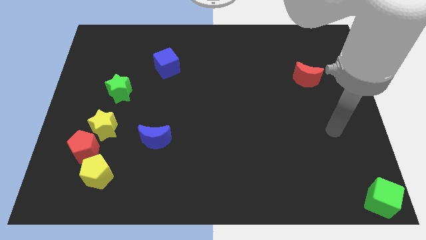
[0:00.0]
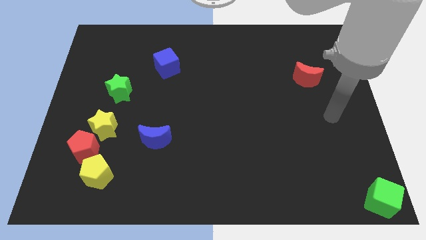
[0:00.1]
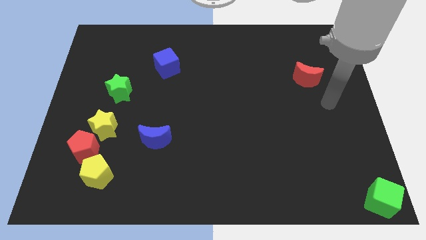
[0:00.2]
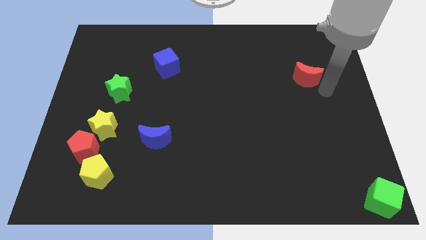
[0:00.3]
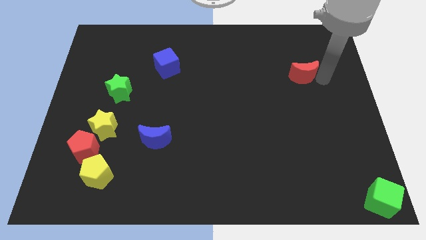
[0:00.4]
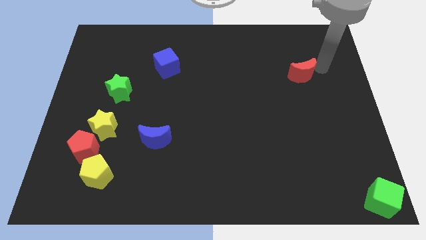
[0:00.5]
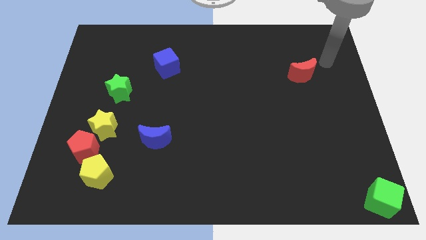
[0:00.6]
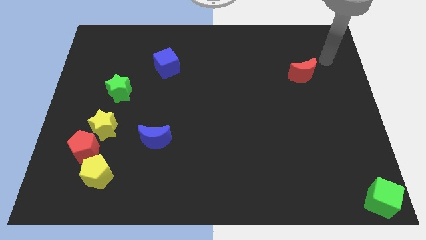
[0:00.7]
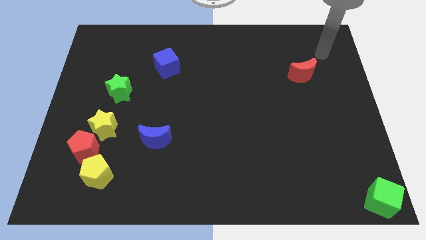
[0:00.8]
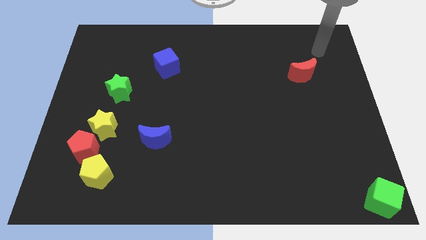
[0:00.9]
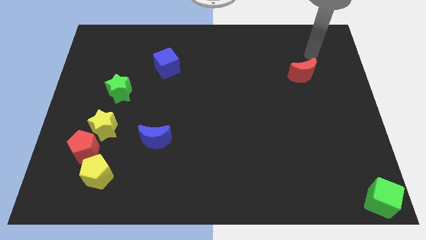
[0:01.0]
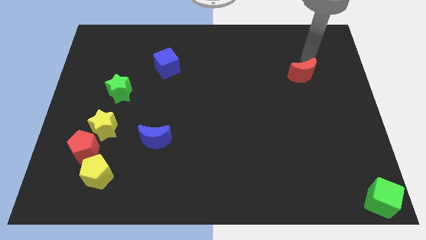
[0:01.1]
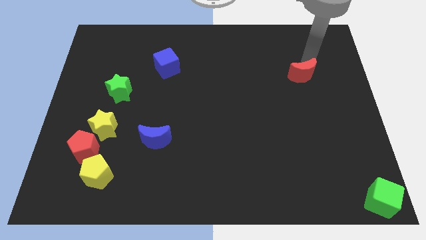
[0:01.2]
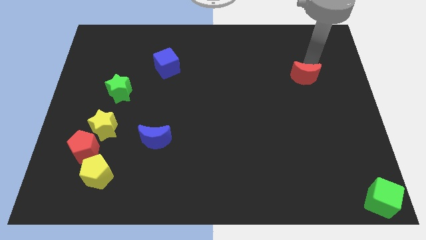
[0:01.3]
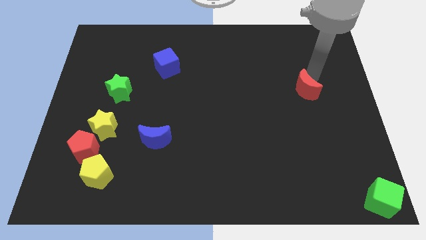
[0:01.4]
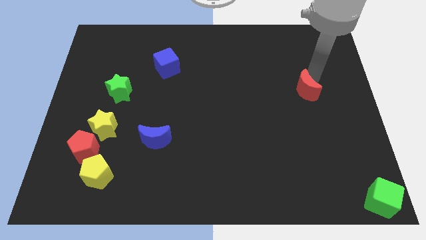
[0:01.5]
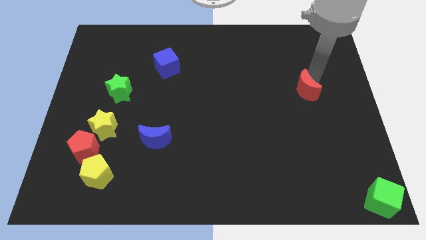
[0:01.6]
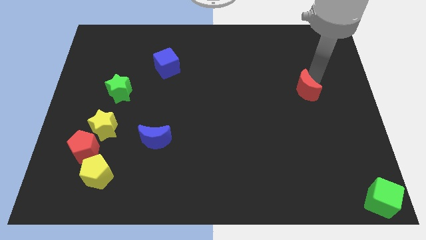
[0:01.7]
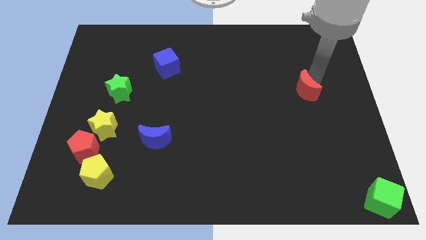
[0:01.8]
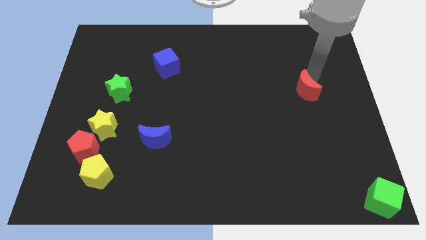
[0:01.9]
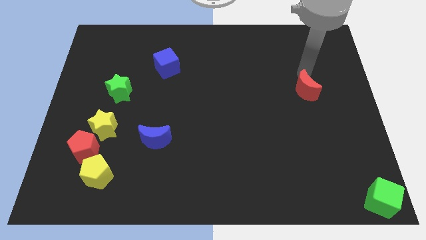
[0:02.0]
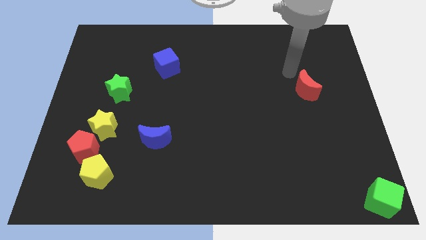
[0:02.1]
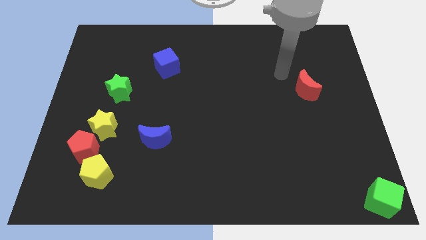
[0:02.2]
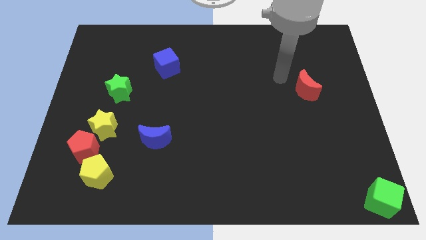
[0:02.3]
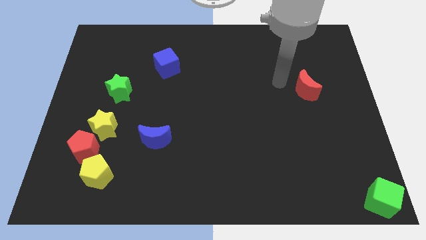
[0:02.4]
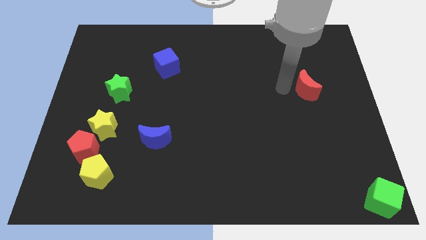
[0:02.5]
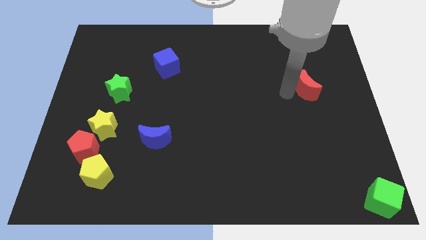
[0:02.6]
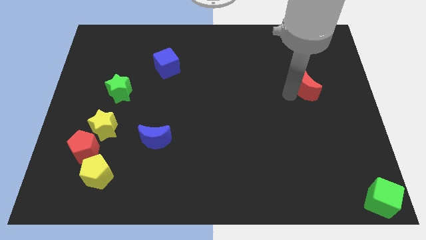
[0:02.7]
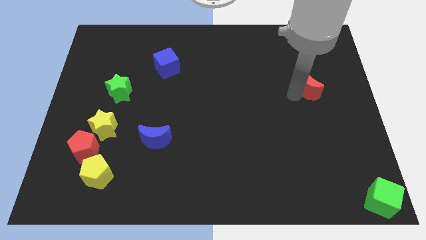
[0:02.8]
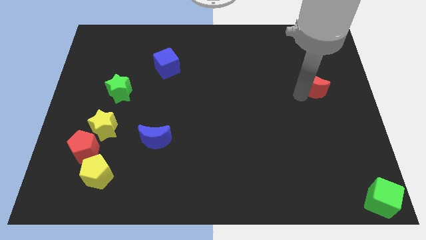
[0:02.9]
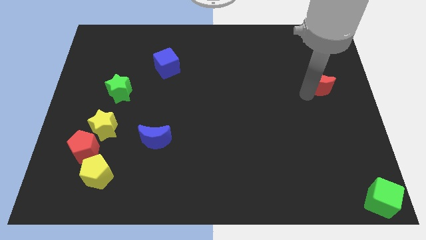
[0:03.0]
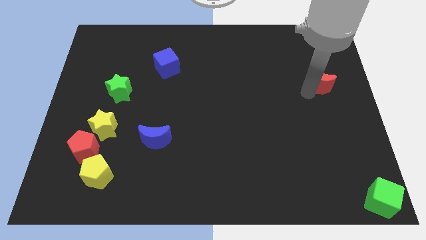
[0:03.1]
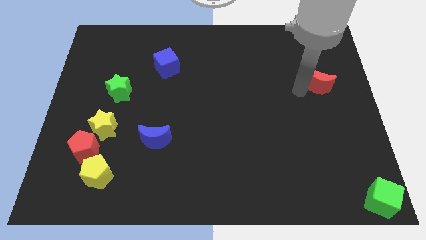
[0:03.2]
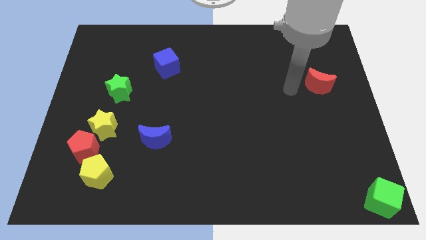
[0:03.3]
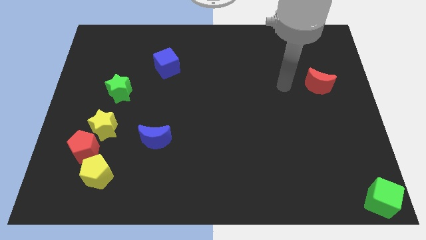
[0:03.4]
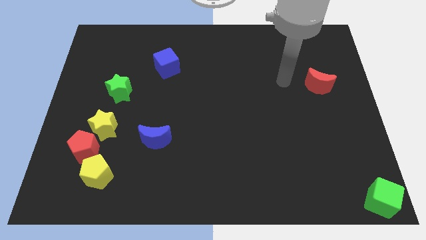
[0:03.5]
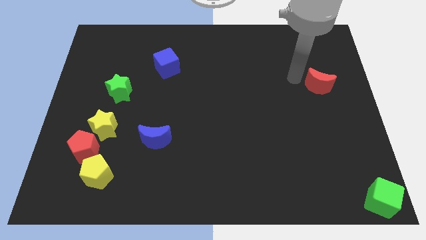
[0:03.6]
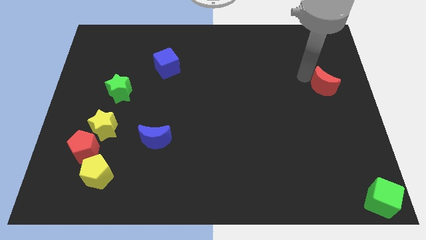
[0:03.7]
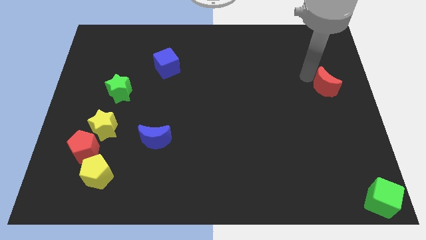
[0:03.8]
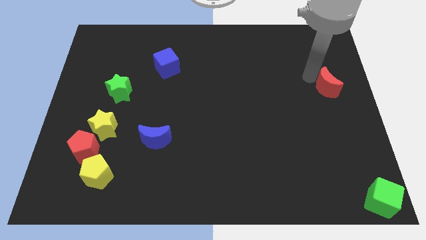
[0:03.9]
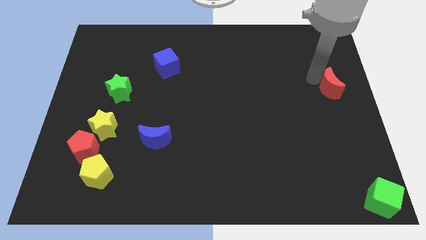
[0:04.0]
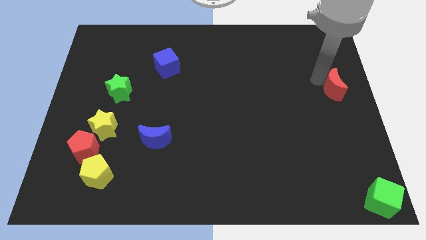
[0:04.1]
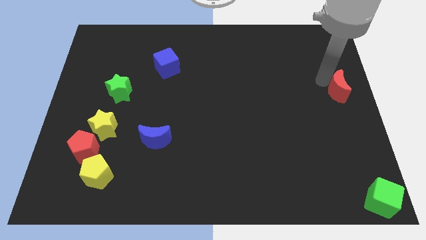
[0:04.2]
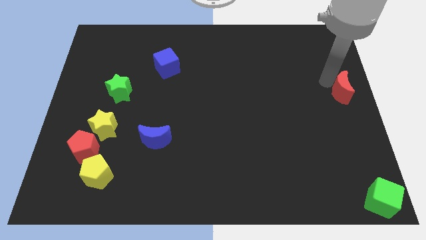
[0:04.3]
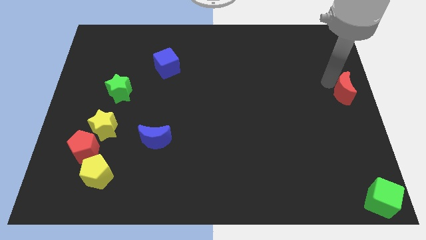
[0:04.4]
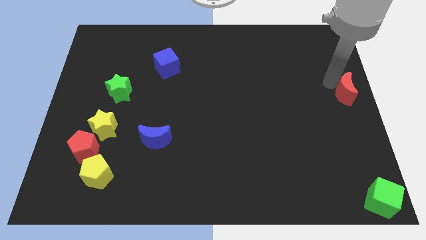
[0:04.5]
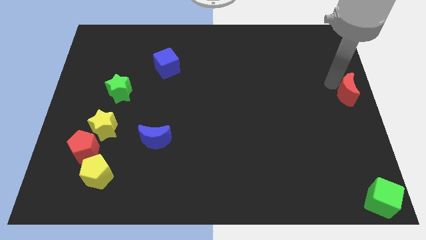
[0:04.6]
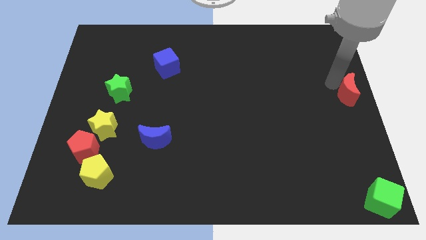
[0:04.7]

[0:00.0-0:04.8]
push the red crescent around

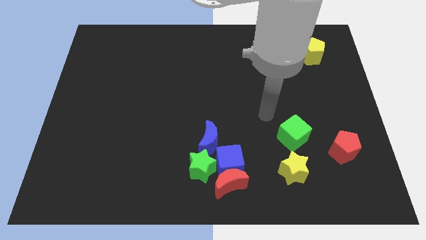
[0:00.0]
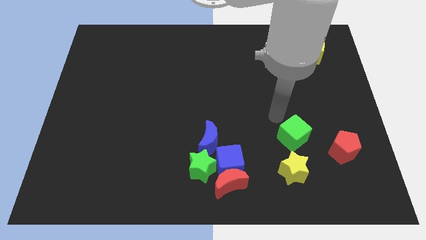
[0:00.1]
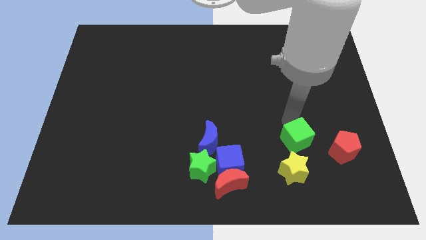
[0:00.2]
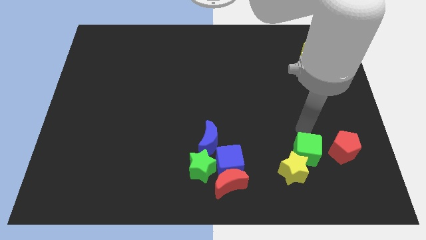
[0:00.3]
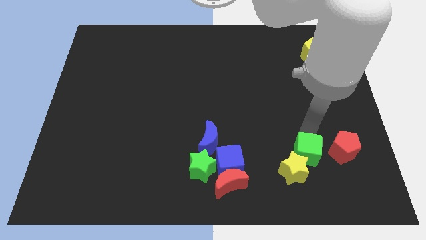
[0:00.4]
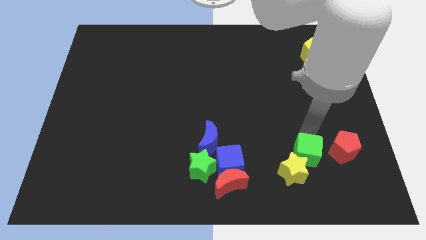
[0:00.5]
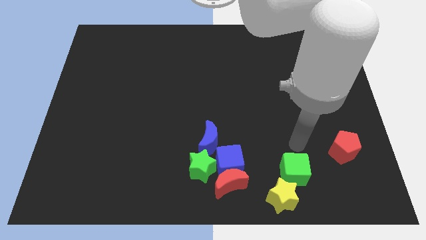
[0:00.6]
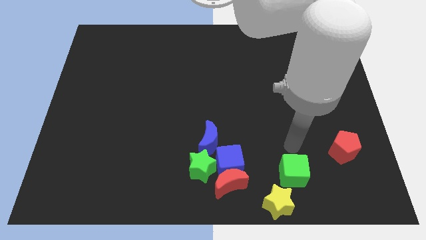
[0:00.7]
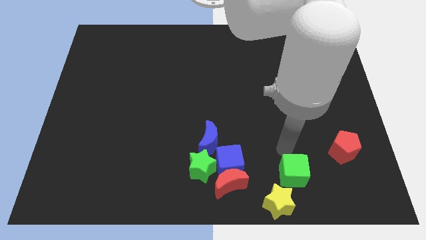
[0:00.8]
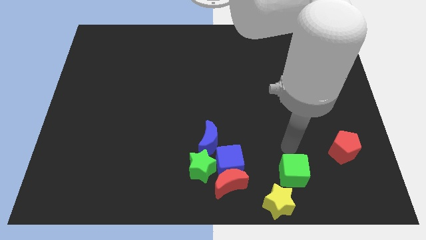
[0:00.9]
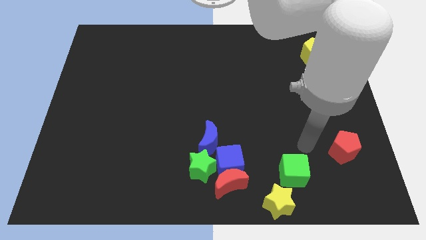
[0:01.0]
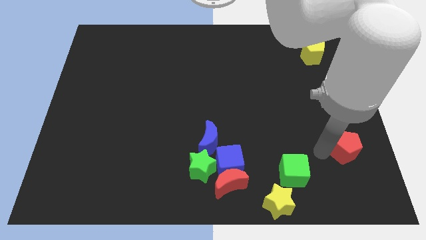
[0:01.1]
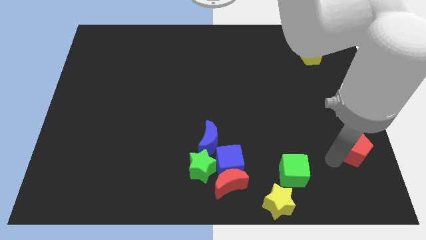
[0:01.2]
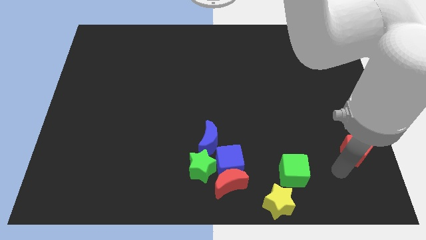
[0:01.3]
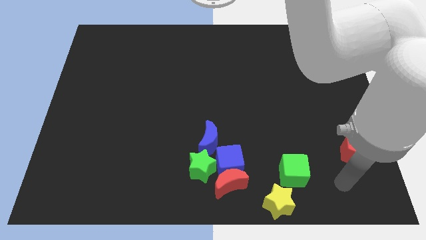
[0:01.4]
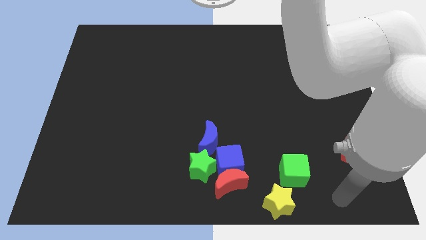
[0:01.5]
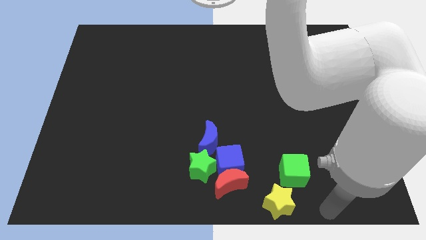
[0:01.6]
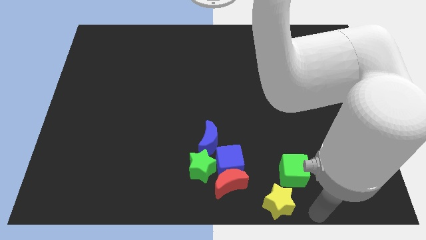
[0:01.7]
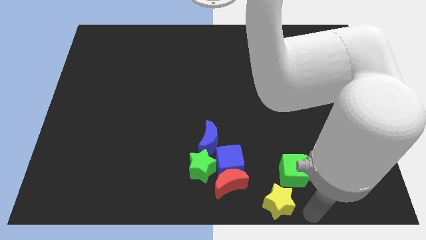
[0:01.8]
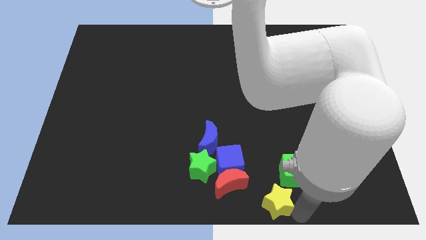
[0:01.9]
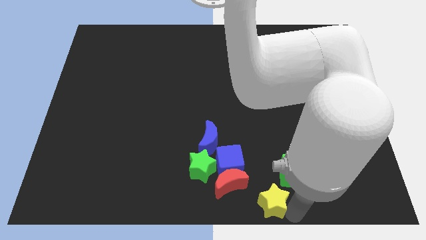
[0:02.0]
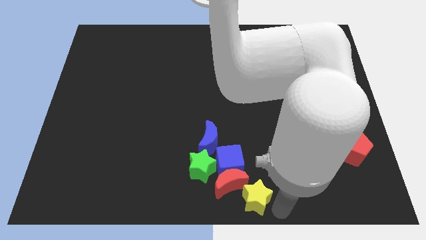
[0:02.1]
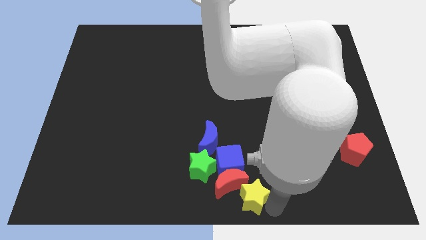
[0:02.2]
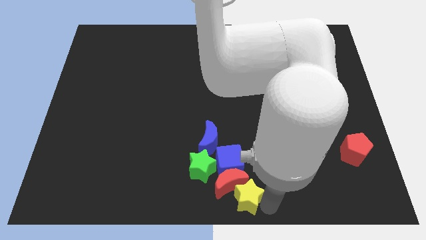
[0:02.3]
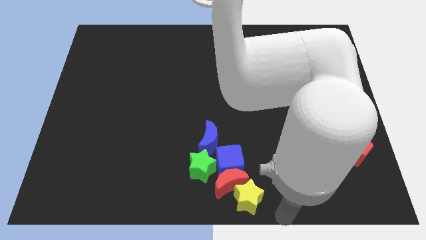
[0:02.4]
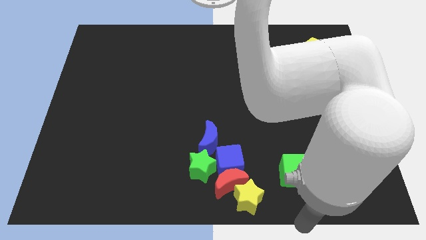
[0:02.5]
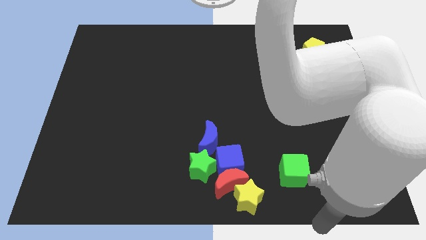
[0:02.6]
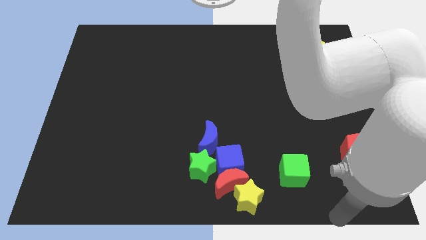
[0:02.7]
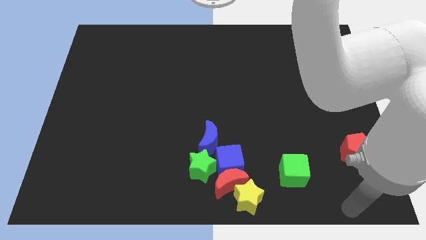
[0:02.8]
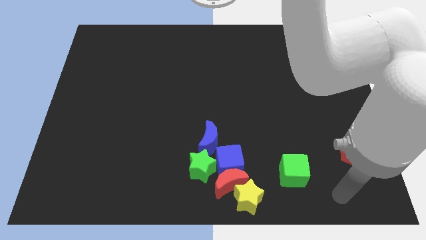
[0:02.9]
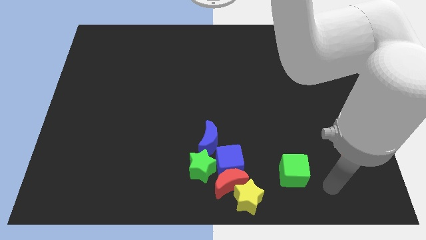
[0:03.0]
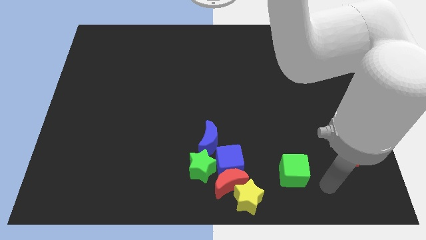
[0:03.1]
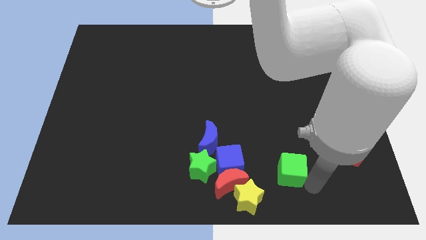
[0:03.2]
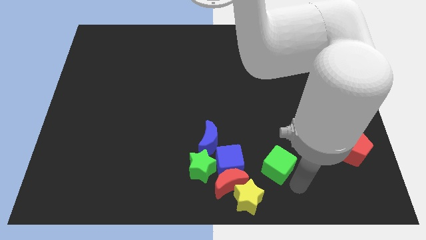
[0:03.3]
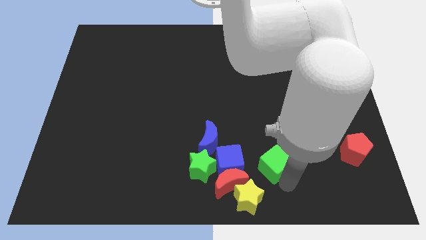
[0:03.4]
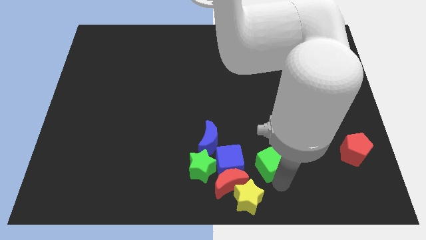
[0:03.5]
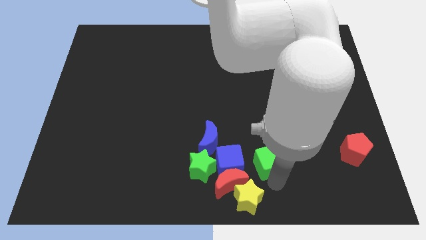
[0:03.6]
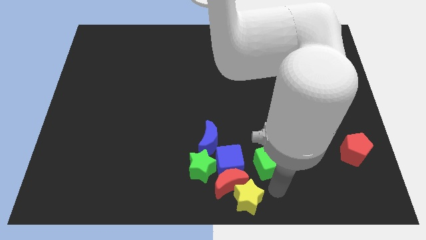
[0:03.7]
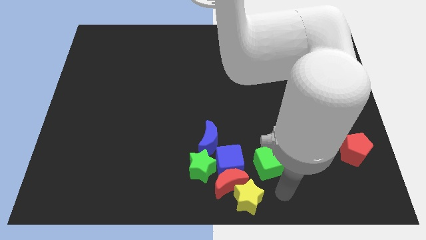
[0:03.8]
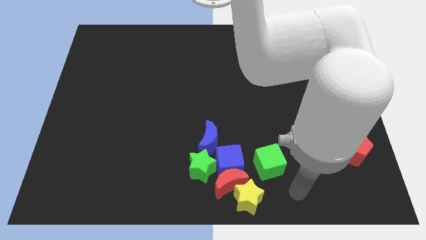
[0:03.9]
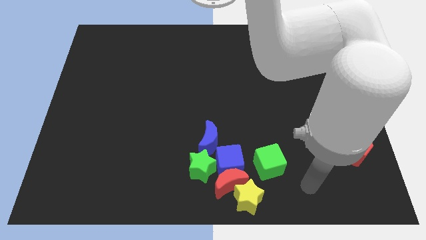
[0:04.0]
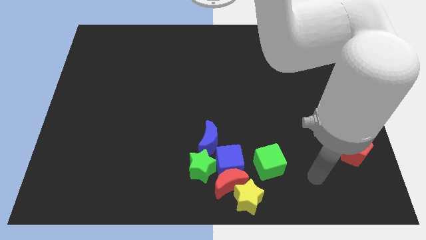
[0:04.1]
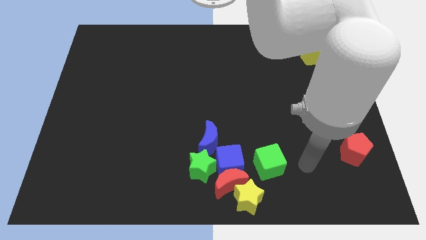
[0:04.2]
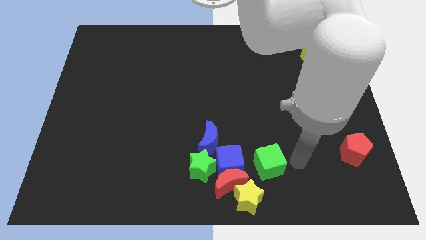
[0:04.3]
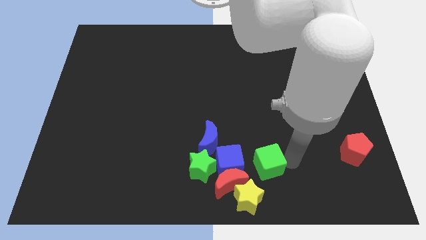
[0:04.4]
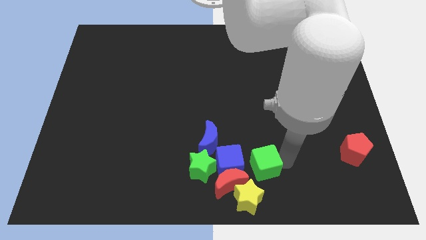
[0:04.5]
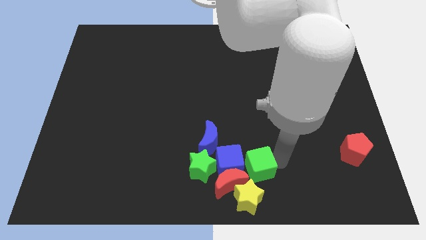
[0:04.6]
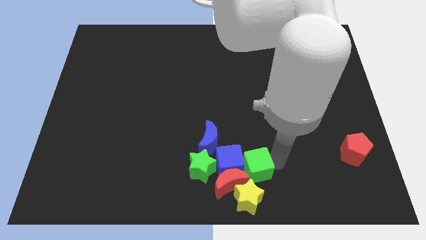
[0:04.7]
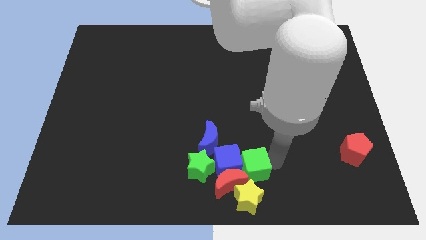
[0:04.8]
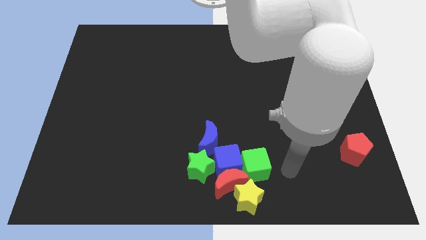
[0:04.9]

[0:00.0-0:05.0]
move the green cube to the right side of the blue cube
